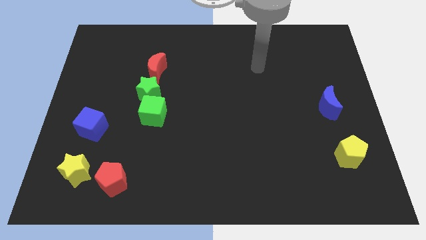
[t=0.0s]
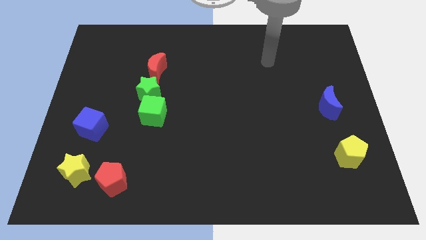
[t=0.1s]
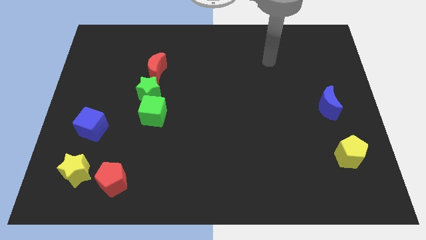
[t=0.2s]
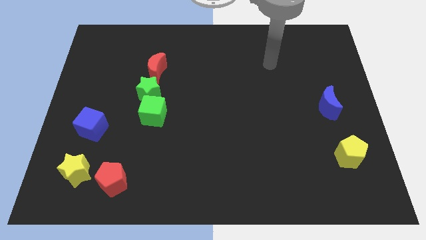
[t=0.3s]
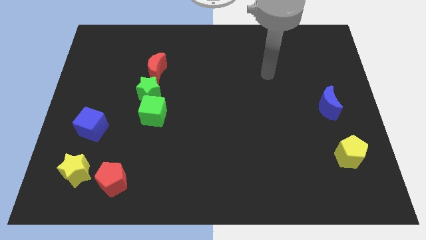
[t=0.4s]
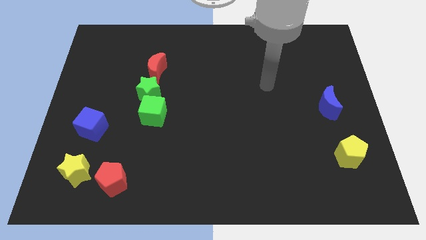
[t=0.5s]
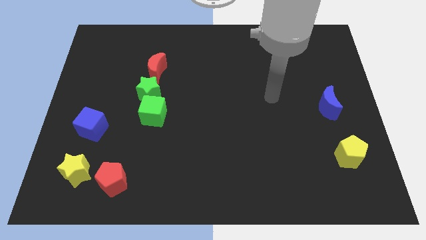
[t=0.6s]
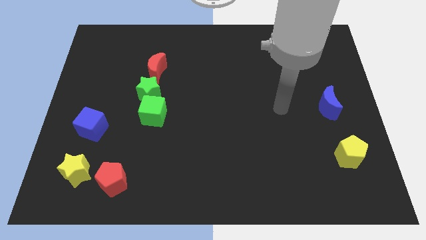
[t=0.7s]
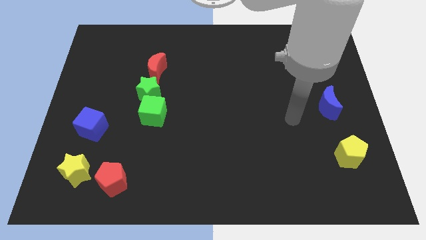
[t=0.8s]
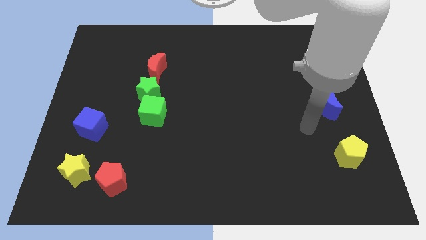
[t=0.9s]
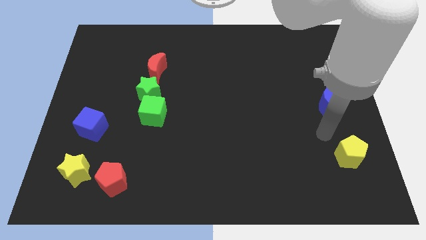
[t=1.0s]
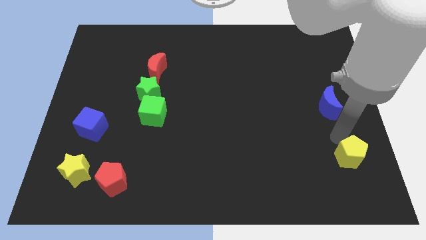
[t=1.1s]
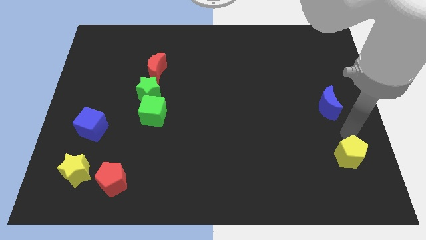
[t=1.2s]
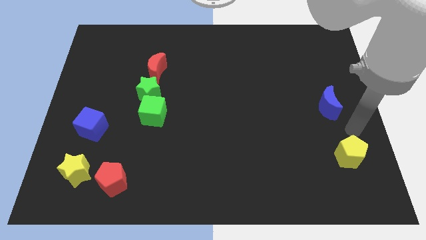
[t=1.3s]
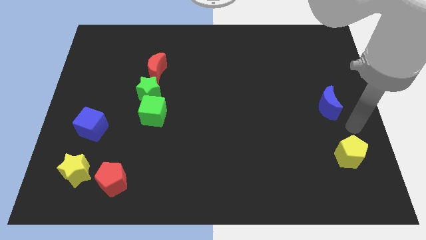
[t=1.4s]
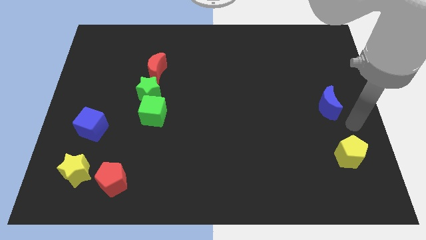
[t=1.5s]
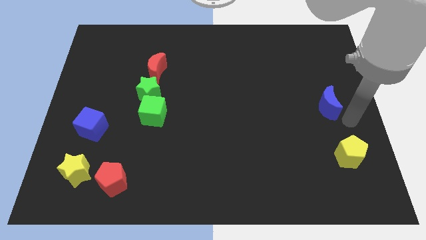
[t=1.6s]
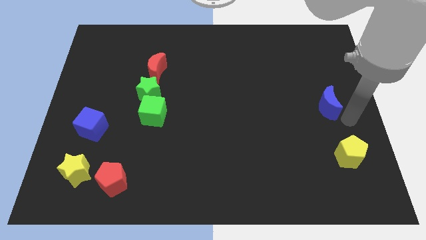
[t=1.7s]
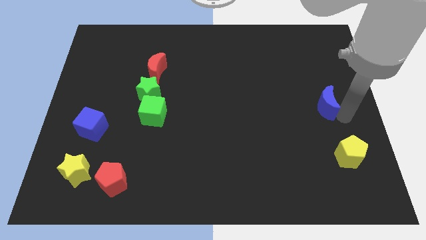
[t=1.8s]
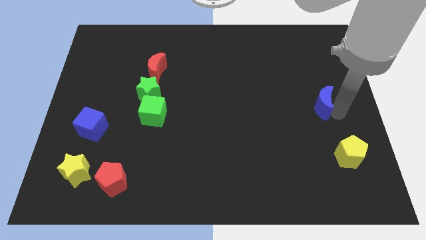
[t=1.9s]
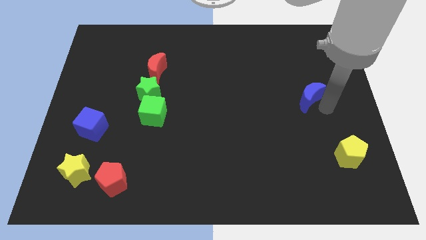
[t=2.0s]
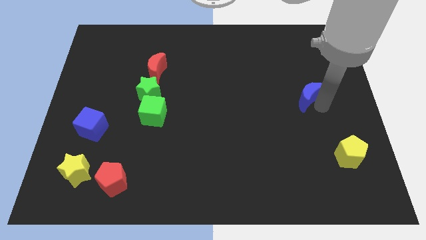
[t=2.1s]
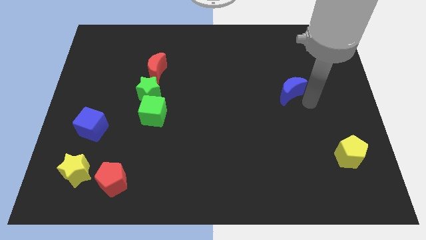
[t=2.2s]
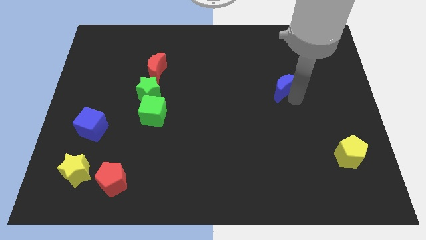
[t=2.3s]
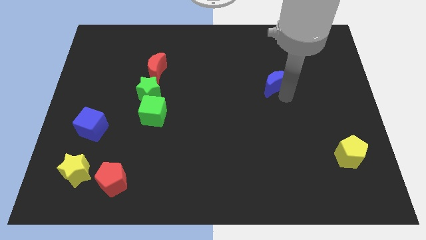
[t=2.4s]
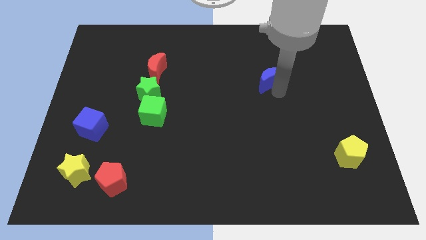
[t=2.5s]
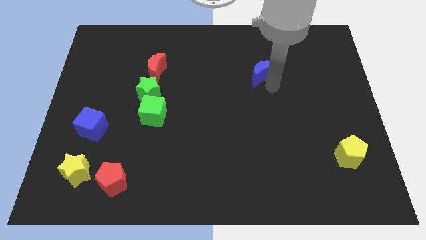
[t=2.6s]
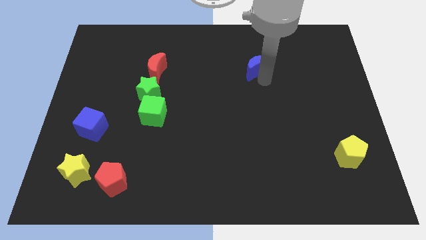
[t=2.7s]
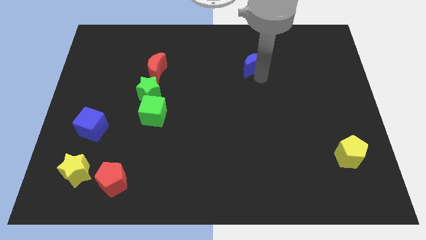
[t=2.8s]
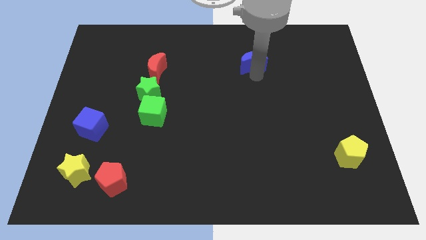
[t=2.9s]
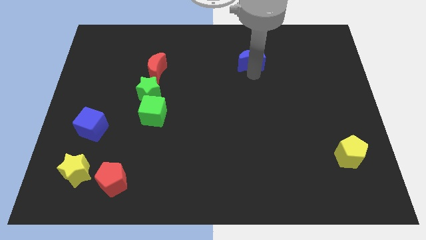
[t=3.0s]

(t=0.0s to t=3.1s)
drag the blue moon towards the top side

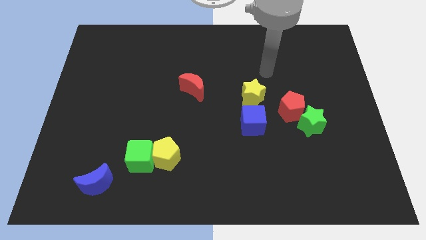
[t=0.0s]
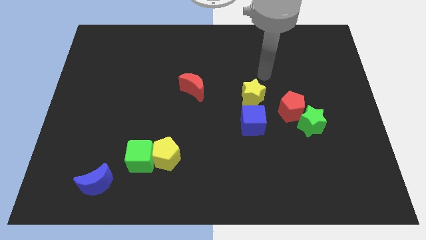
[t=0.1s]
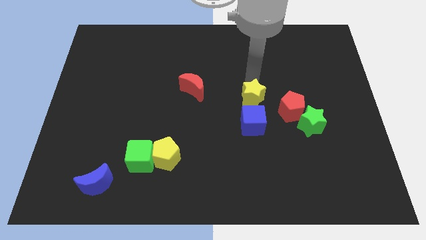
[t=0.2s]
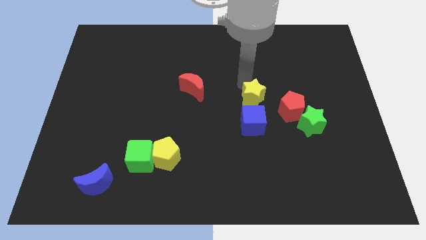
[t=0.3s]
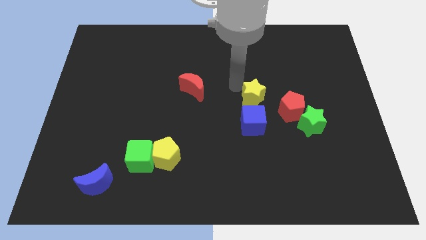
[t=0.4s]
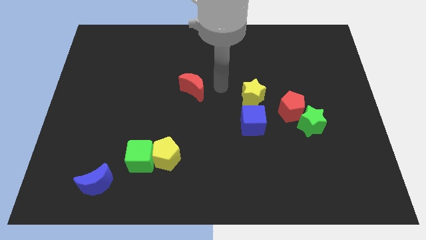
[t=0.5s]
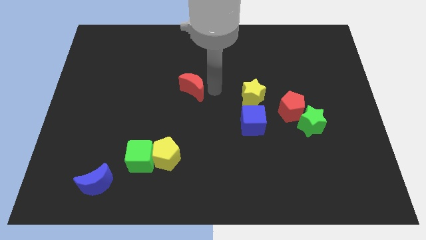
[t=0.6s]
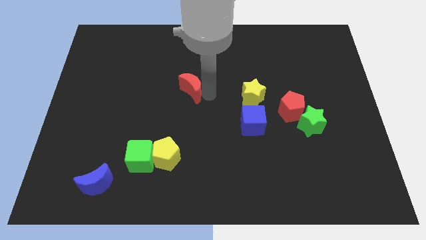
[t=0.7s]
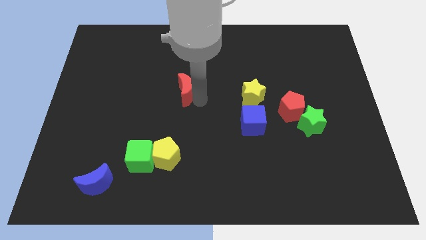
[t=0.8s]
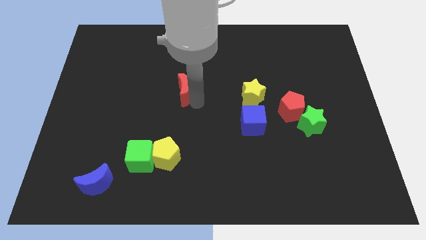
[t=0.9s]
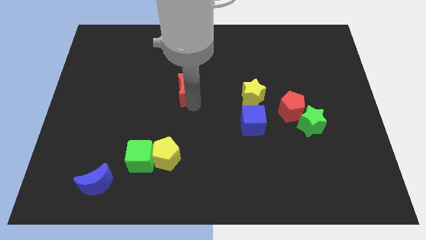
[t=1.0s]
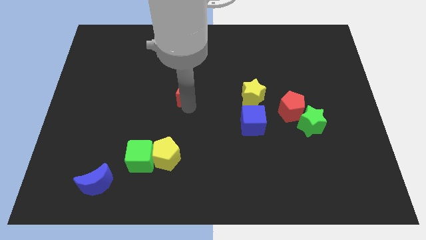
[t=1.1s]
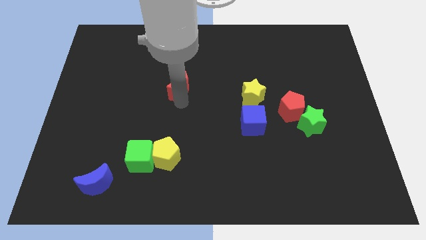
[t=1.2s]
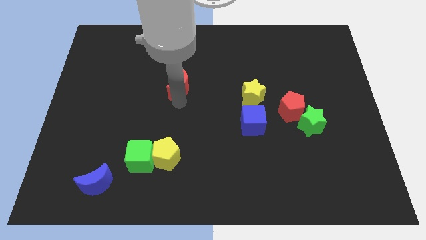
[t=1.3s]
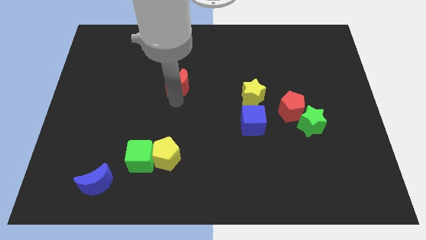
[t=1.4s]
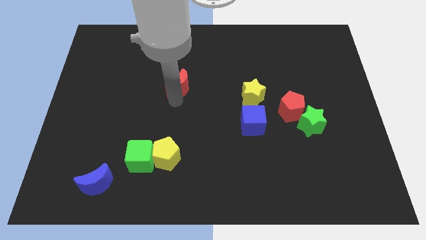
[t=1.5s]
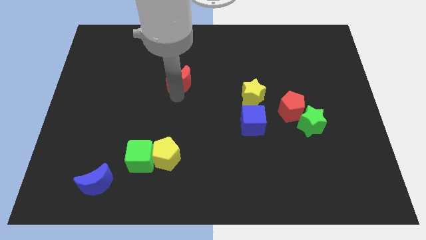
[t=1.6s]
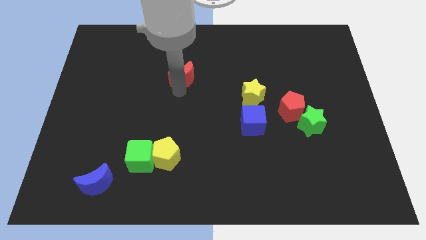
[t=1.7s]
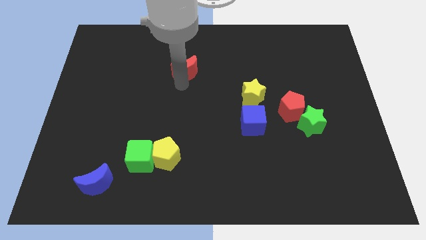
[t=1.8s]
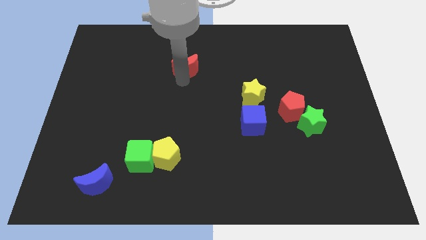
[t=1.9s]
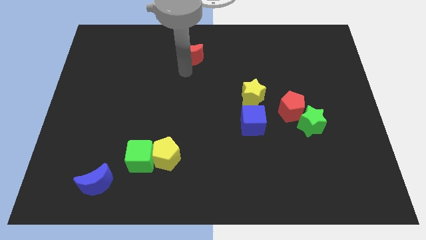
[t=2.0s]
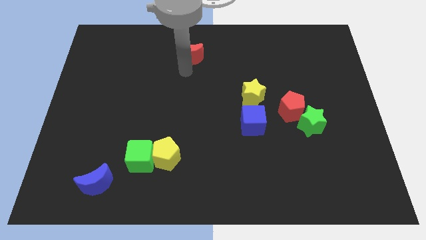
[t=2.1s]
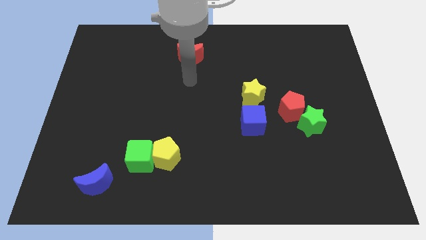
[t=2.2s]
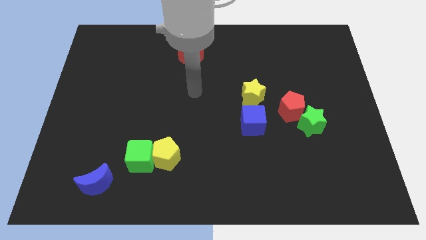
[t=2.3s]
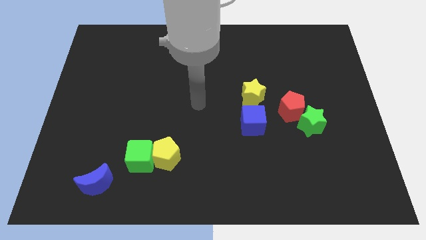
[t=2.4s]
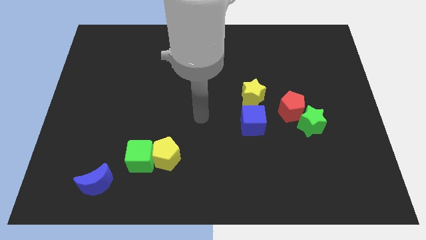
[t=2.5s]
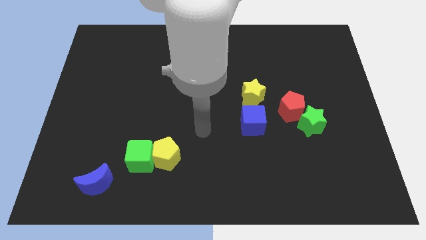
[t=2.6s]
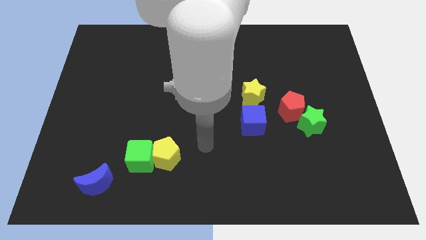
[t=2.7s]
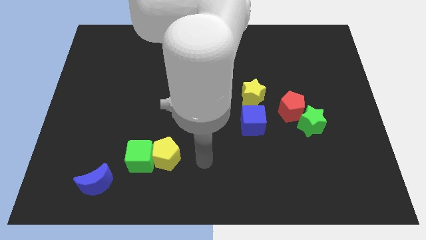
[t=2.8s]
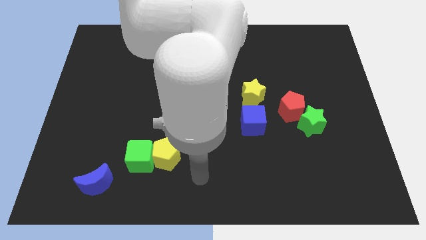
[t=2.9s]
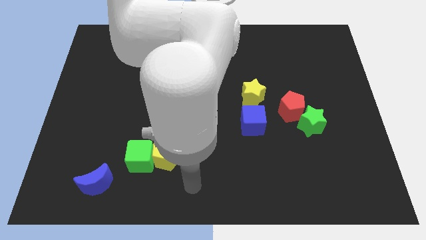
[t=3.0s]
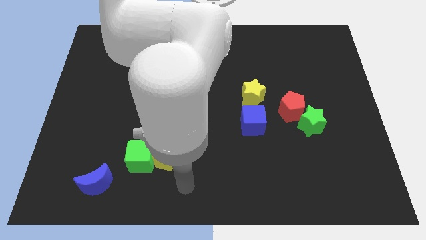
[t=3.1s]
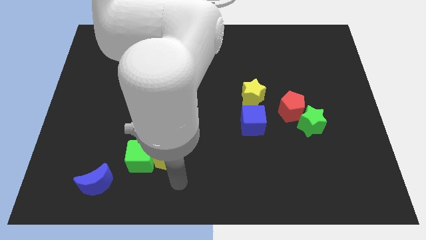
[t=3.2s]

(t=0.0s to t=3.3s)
push the red crescent to the top center of the board

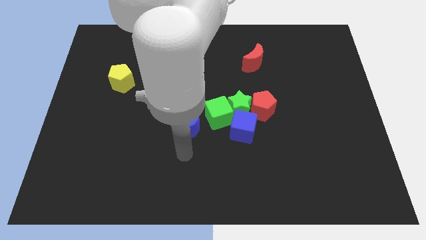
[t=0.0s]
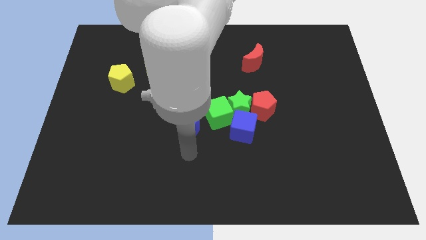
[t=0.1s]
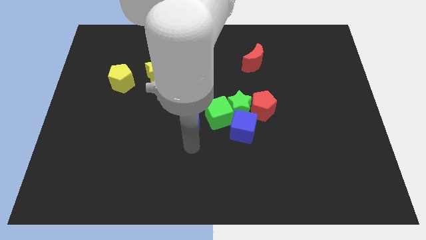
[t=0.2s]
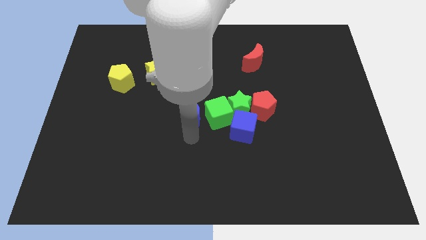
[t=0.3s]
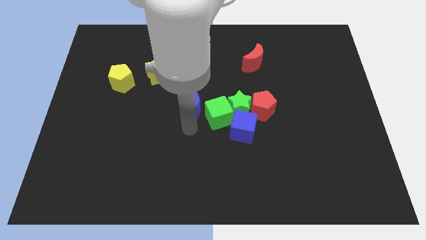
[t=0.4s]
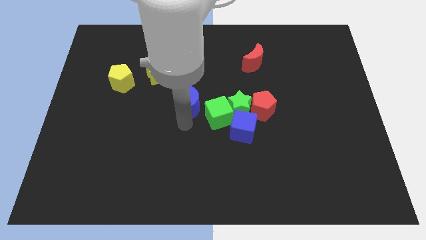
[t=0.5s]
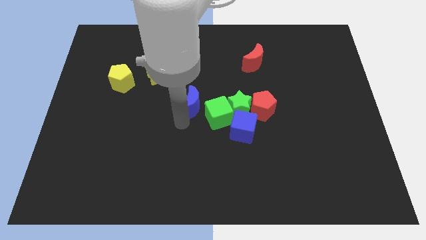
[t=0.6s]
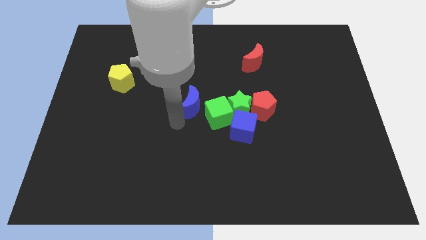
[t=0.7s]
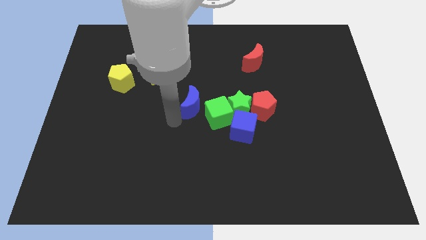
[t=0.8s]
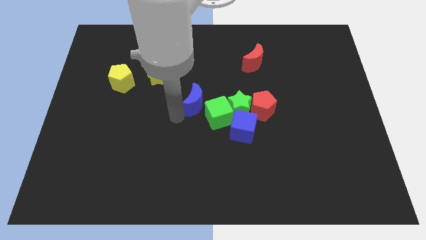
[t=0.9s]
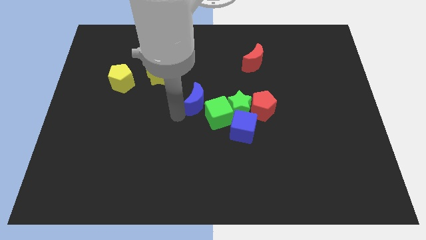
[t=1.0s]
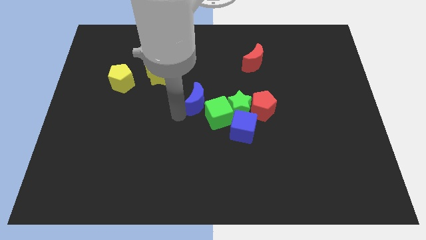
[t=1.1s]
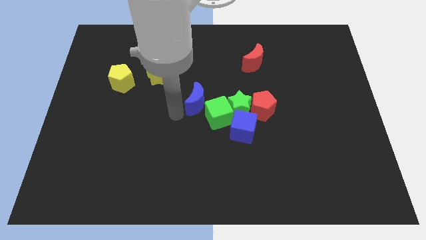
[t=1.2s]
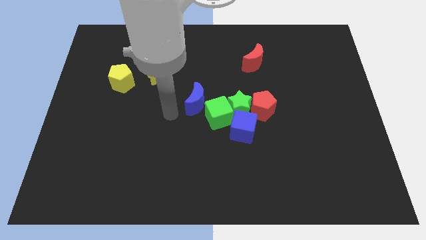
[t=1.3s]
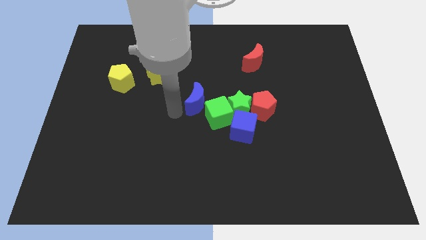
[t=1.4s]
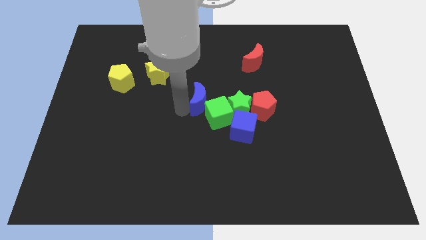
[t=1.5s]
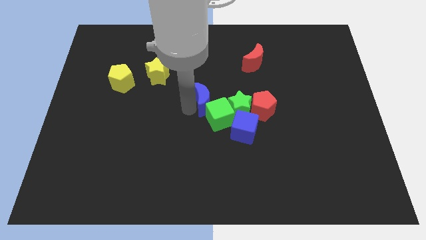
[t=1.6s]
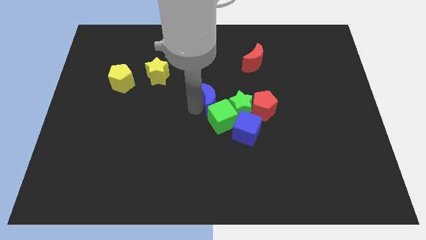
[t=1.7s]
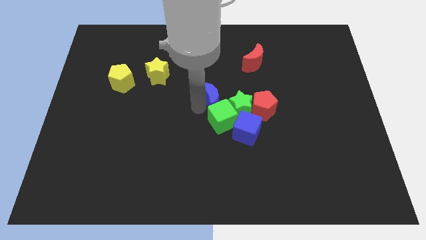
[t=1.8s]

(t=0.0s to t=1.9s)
place the blue crescent above the green cube

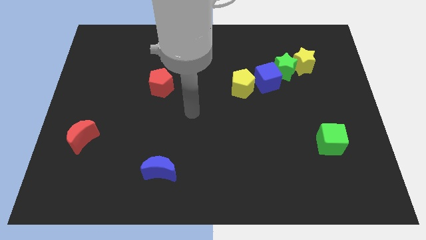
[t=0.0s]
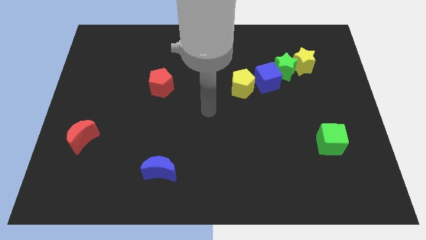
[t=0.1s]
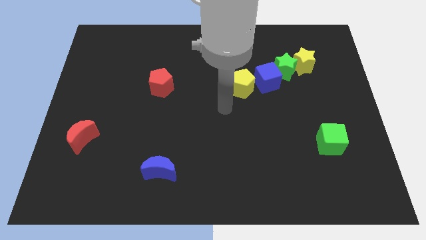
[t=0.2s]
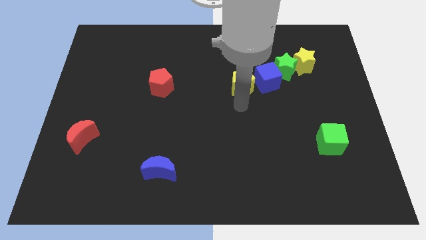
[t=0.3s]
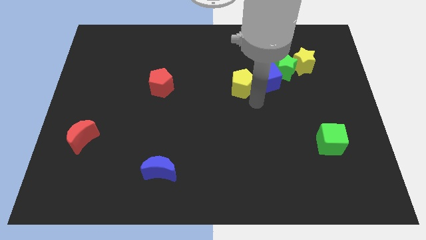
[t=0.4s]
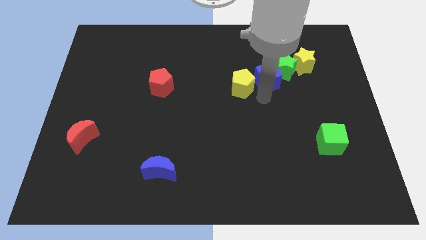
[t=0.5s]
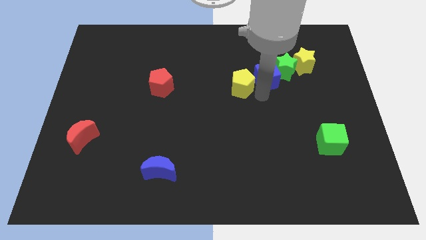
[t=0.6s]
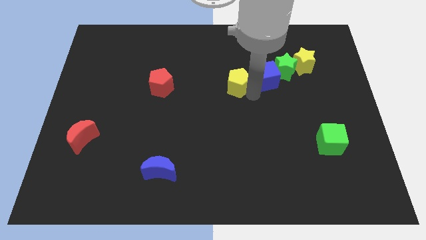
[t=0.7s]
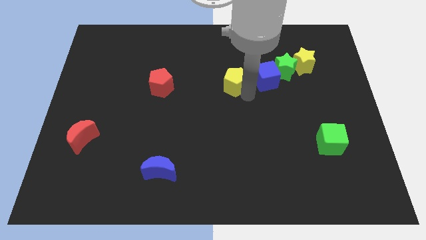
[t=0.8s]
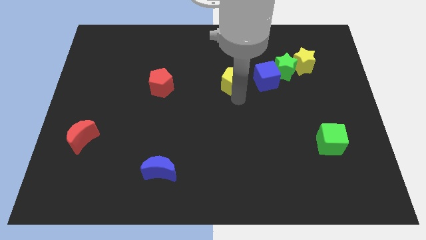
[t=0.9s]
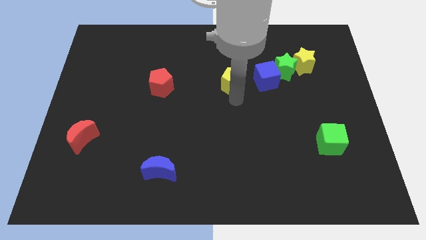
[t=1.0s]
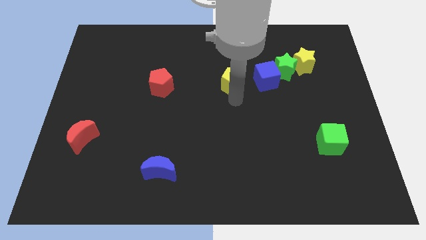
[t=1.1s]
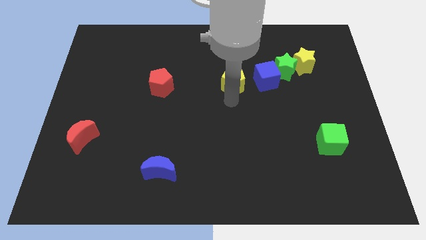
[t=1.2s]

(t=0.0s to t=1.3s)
separate yellow pentagon and blue cube
